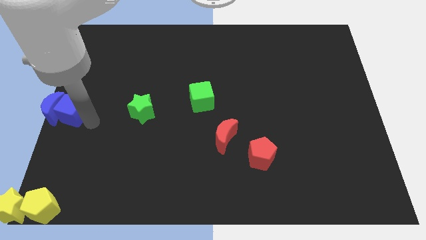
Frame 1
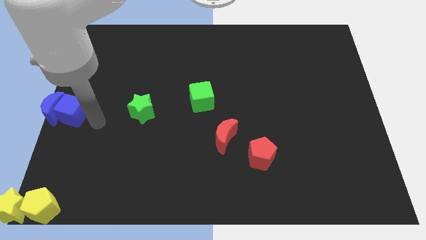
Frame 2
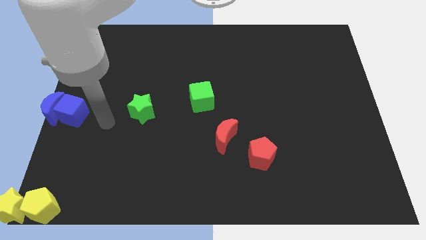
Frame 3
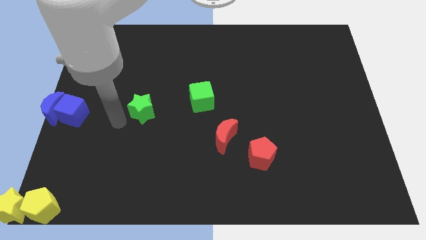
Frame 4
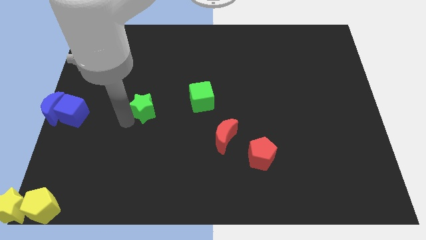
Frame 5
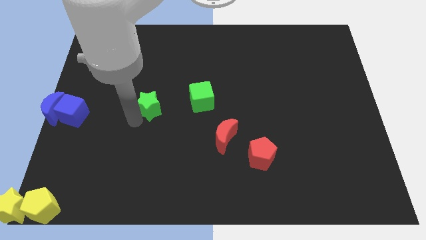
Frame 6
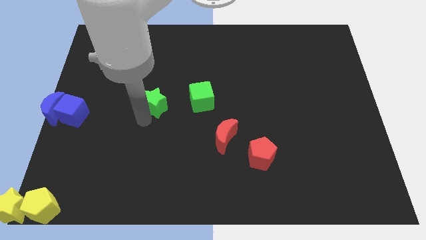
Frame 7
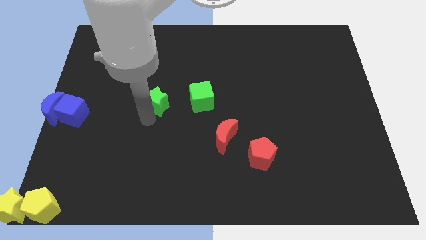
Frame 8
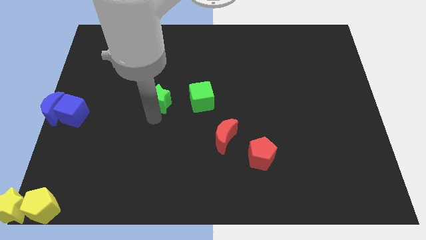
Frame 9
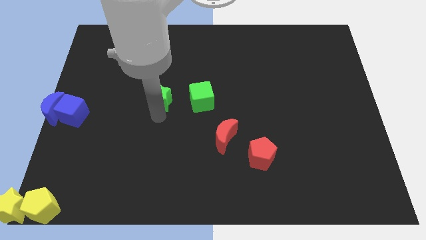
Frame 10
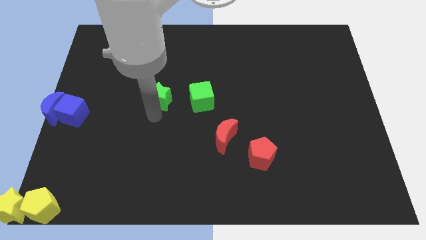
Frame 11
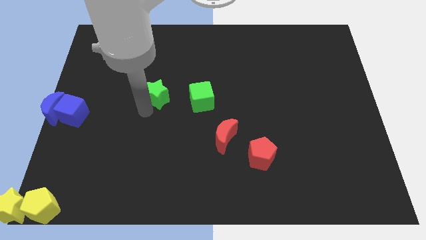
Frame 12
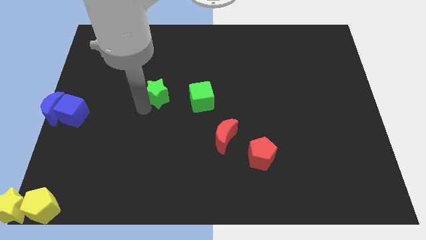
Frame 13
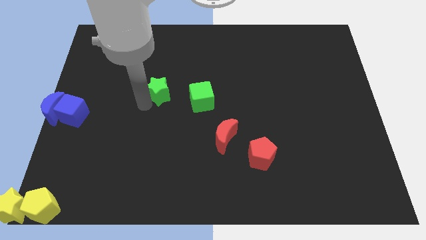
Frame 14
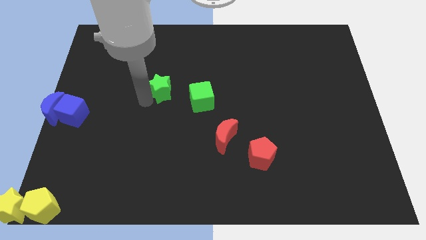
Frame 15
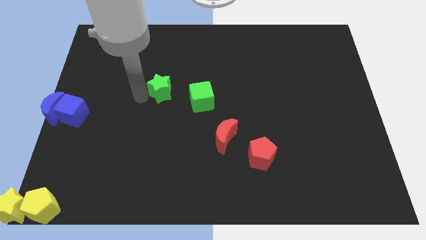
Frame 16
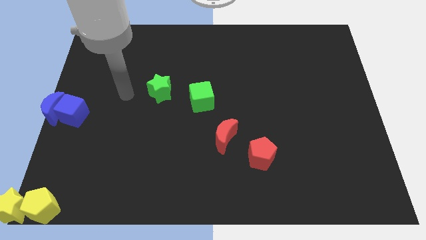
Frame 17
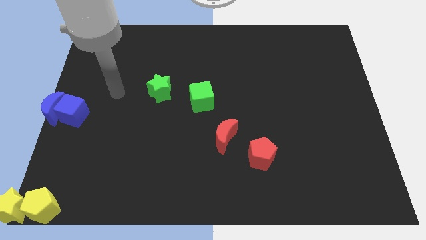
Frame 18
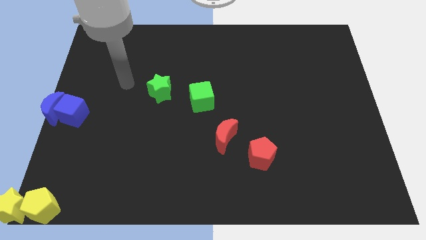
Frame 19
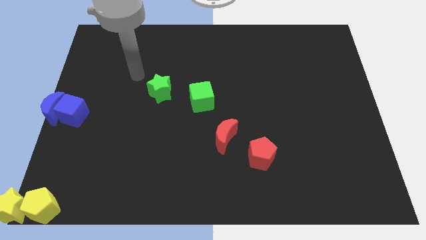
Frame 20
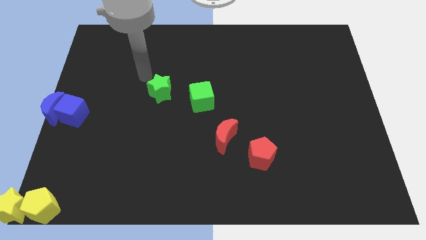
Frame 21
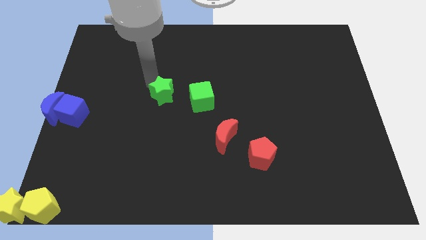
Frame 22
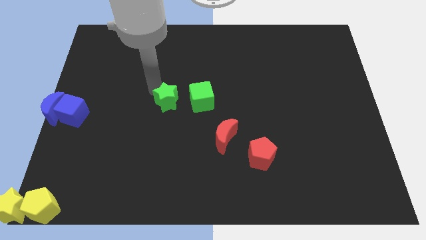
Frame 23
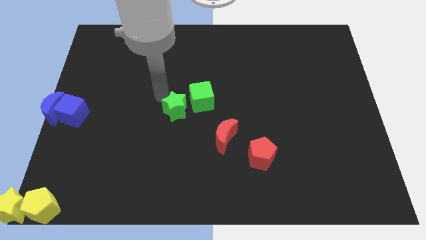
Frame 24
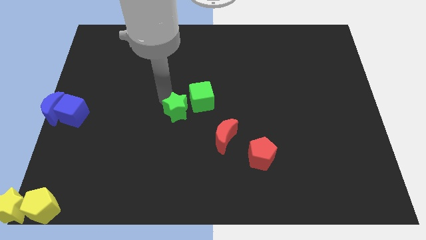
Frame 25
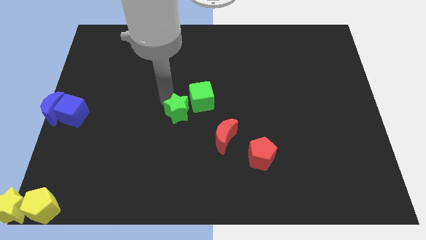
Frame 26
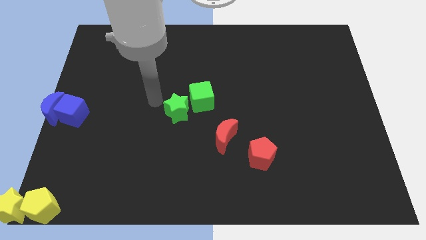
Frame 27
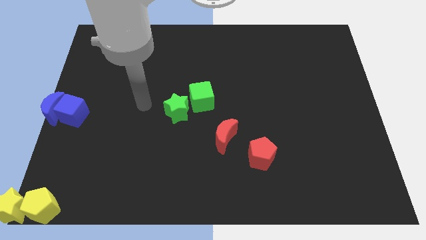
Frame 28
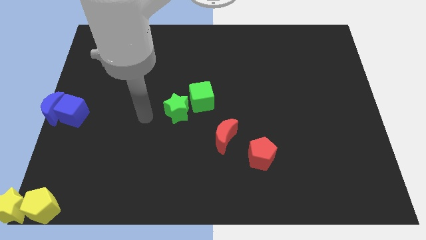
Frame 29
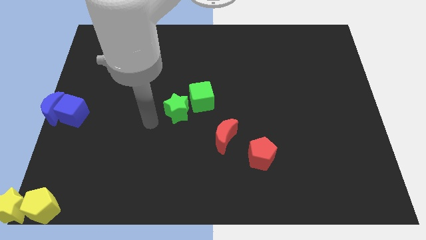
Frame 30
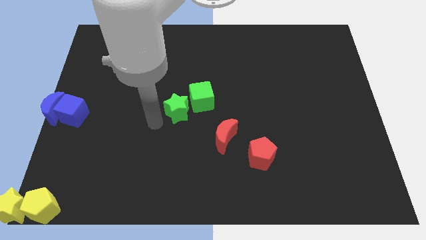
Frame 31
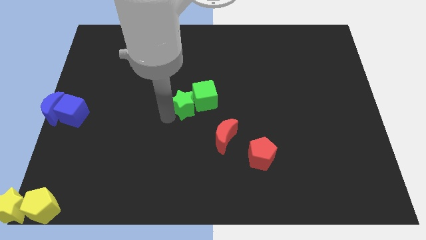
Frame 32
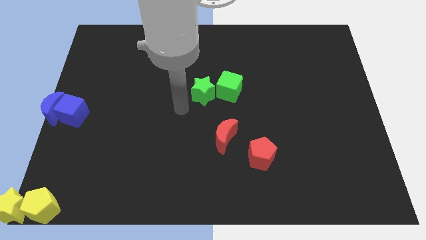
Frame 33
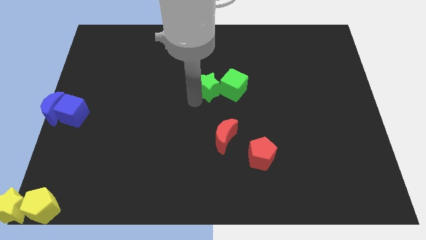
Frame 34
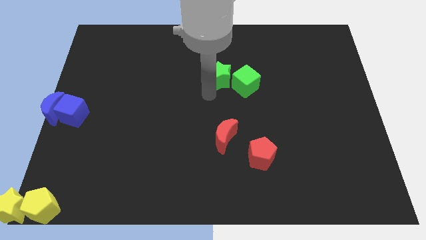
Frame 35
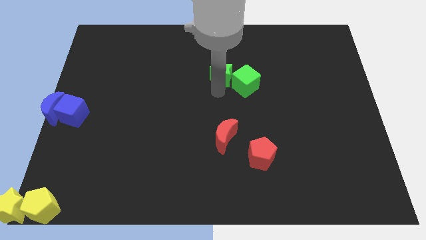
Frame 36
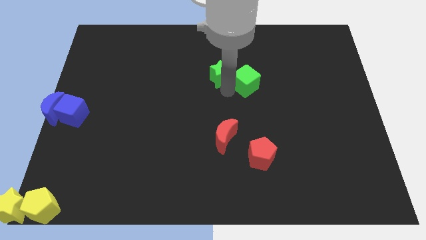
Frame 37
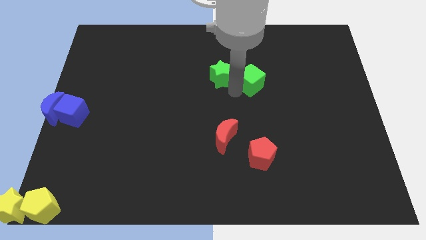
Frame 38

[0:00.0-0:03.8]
push the green star with green cube to together above red blocks

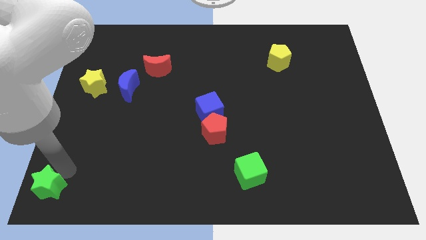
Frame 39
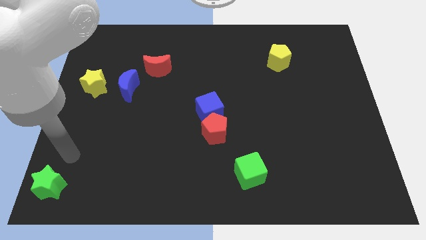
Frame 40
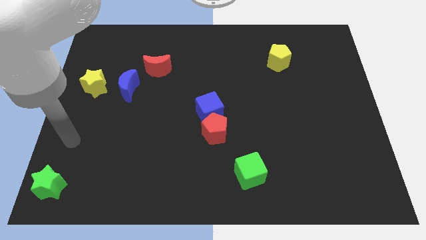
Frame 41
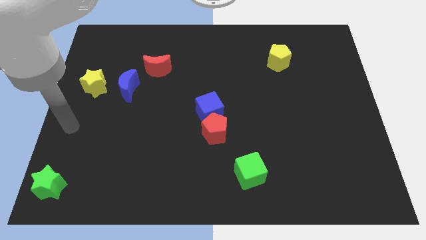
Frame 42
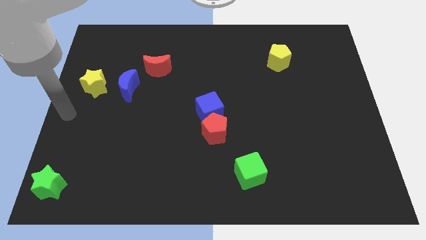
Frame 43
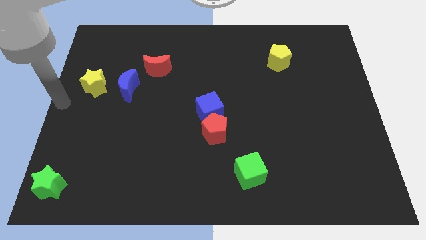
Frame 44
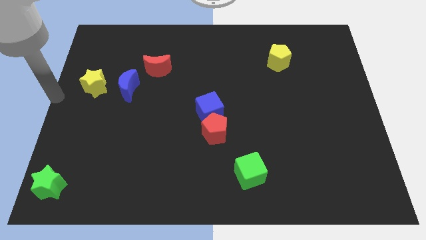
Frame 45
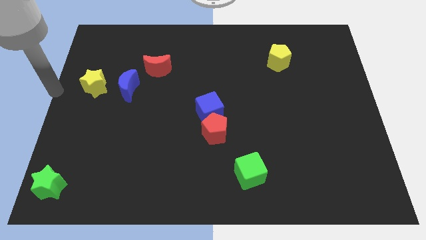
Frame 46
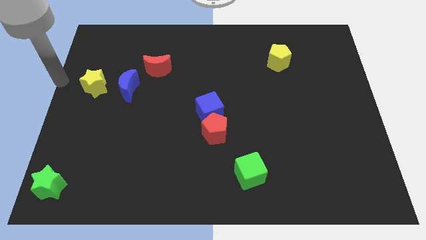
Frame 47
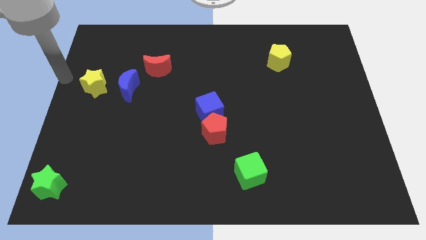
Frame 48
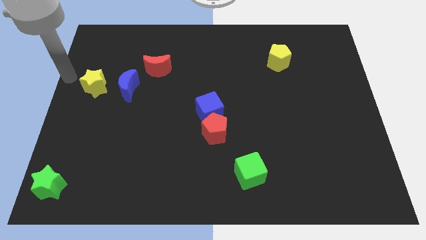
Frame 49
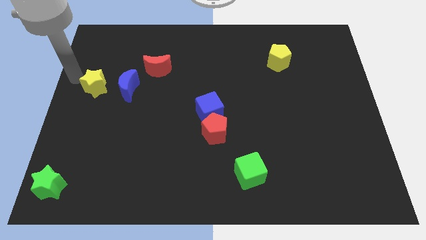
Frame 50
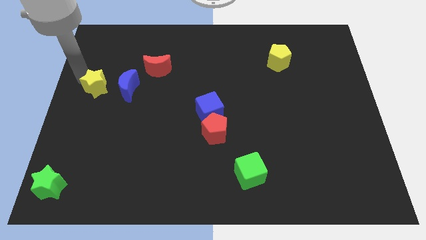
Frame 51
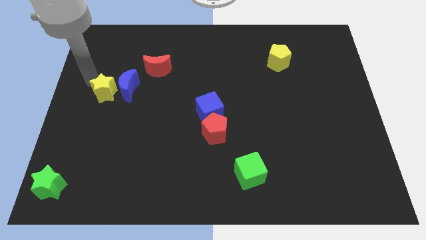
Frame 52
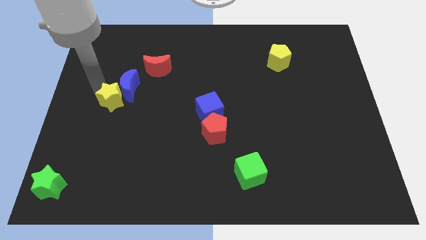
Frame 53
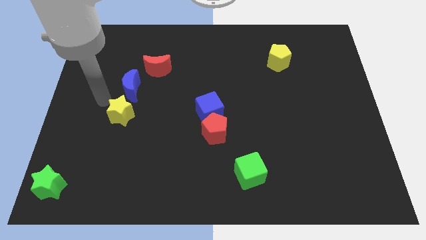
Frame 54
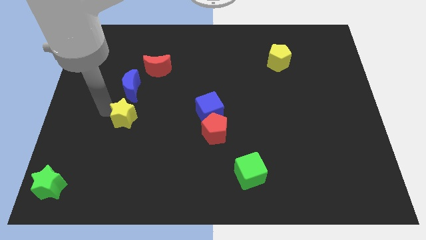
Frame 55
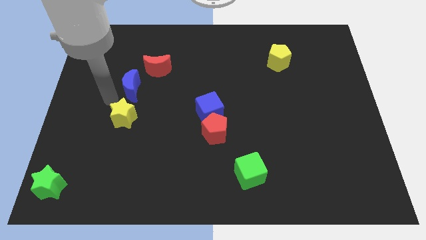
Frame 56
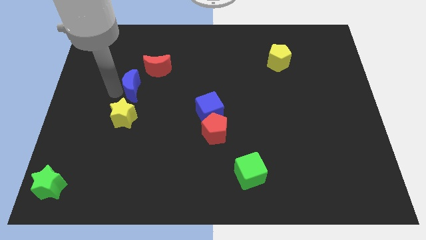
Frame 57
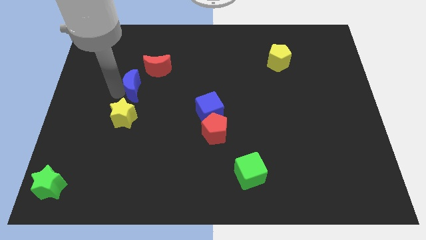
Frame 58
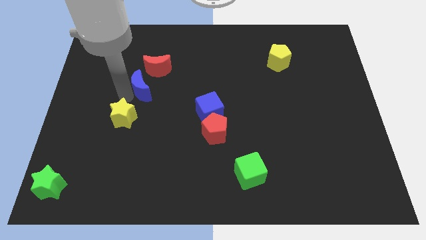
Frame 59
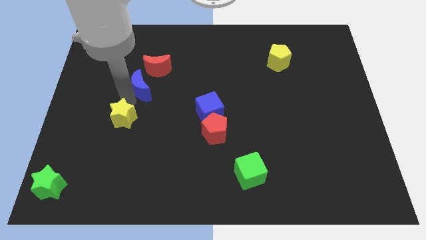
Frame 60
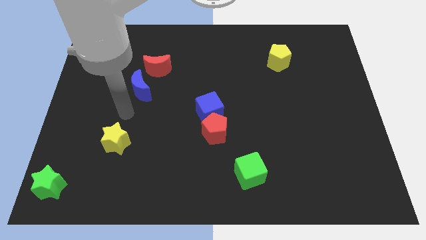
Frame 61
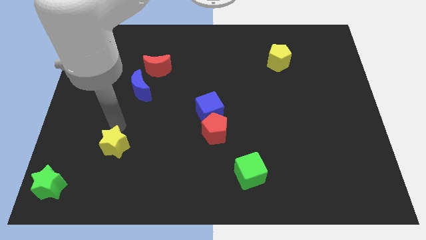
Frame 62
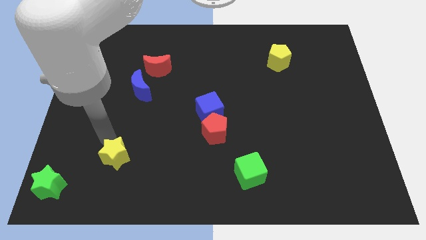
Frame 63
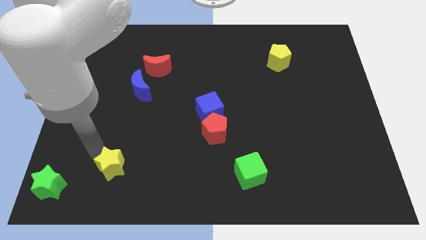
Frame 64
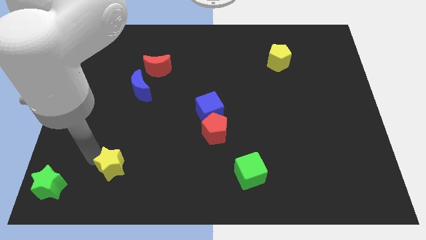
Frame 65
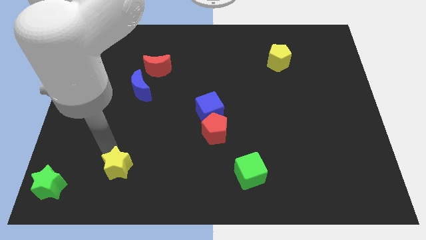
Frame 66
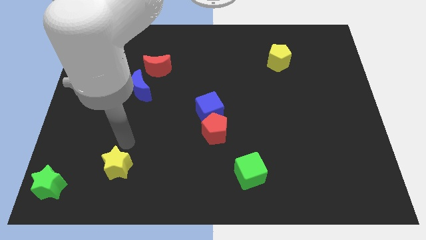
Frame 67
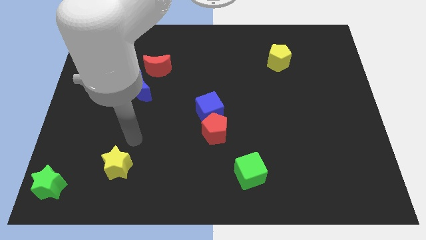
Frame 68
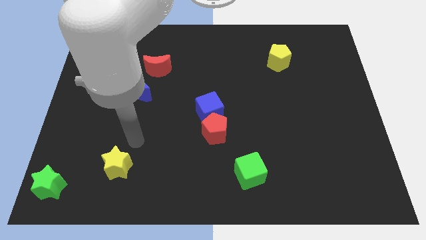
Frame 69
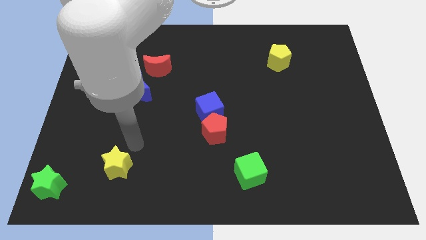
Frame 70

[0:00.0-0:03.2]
place the yellow star vertically below the blue moon

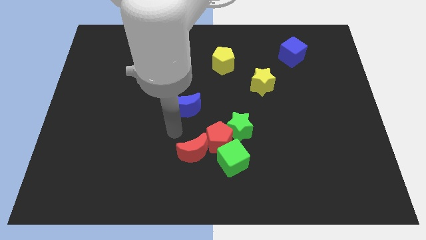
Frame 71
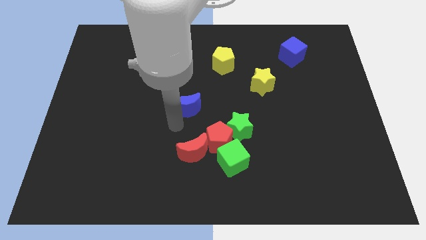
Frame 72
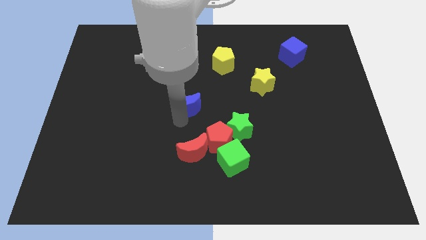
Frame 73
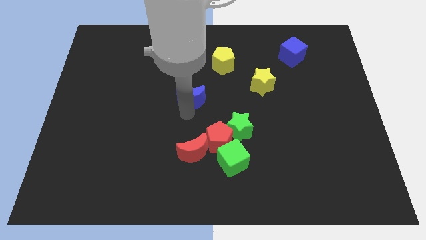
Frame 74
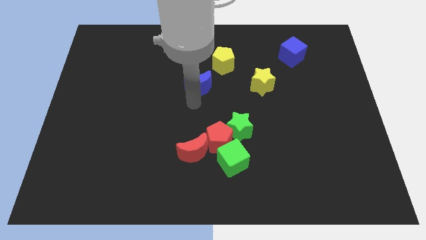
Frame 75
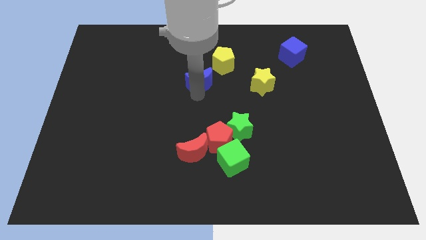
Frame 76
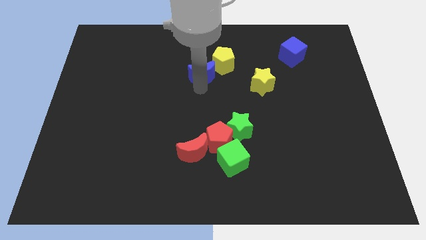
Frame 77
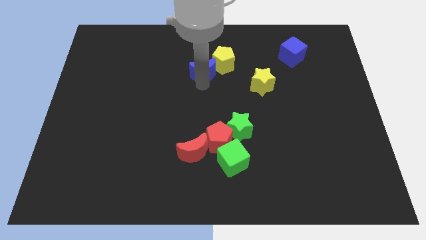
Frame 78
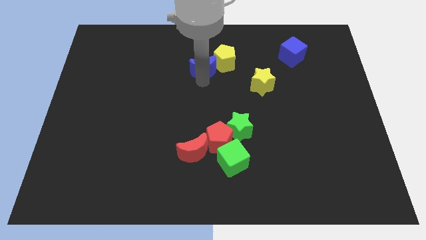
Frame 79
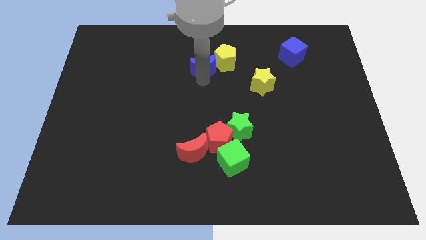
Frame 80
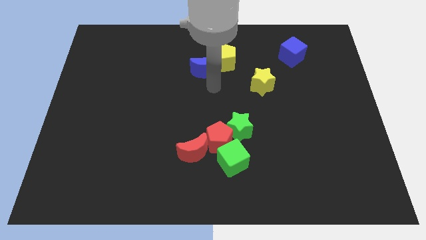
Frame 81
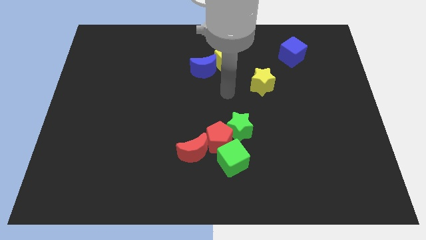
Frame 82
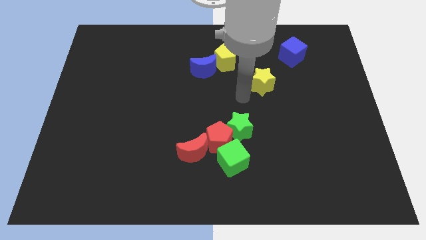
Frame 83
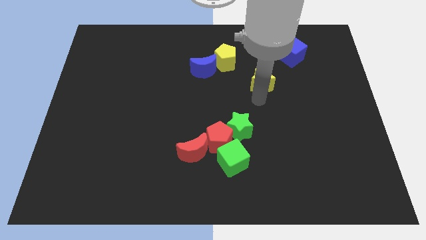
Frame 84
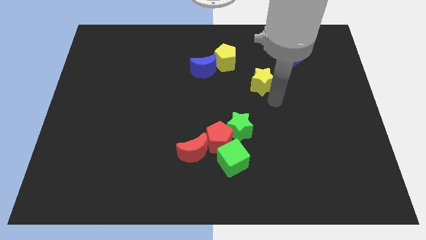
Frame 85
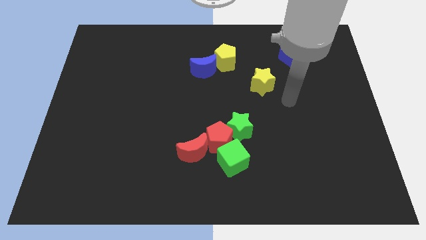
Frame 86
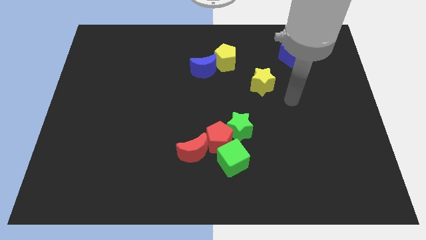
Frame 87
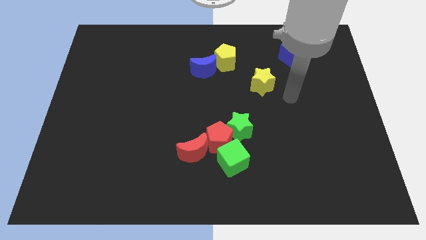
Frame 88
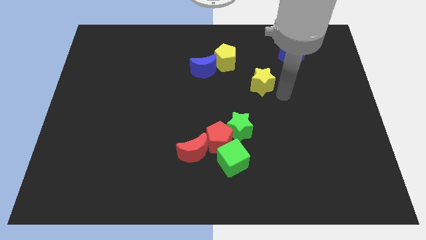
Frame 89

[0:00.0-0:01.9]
slightly push the blue half moon into the yellow pentagon

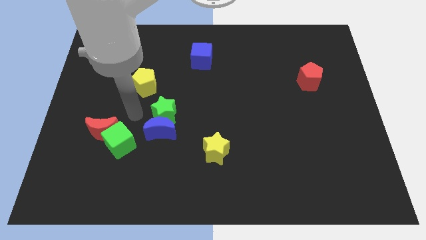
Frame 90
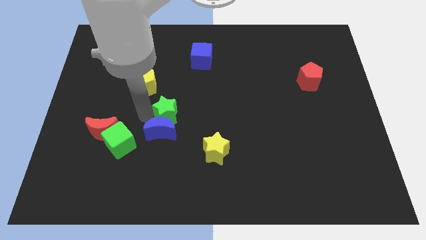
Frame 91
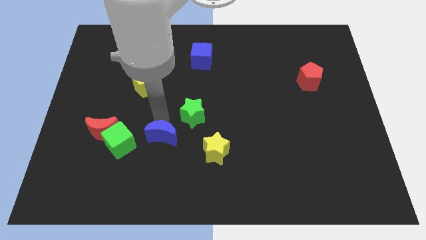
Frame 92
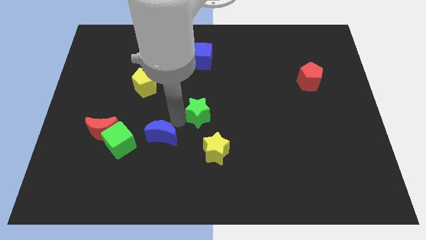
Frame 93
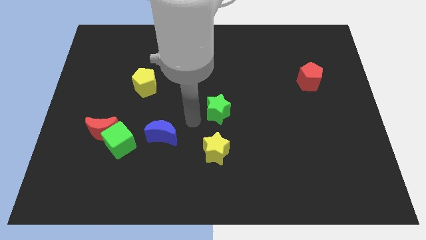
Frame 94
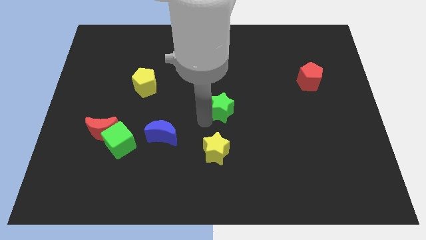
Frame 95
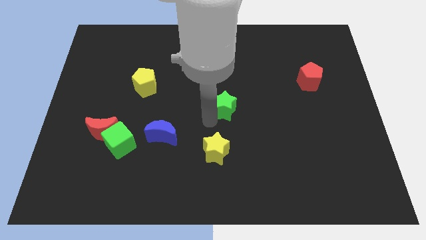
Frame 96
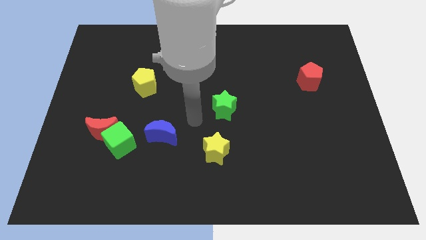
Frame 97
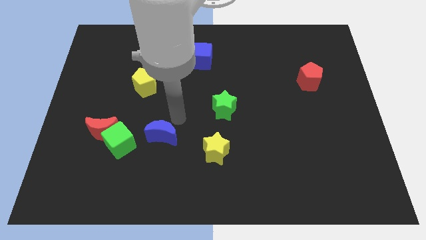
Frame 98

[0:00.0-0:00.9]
push the green star to the center
